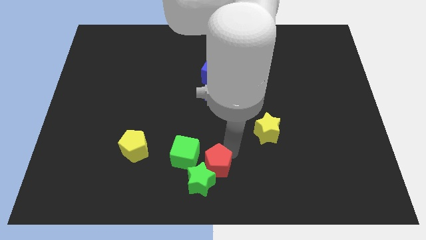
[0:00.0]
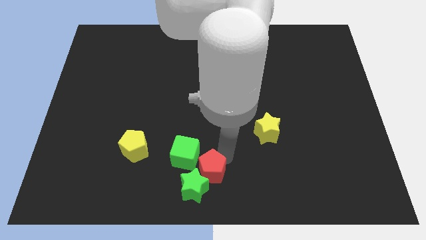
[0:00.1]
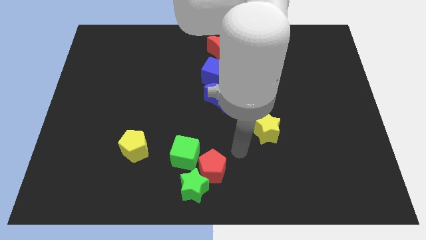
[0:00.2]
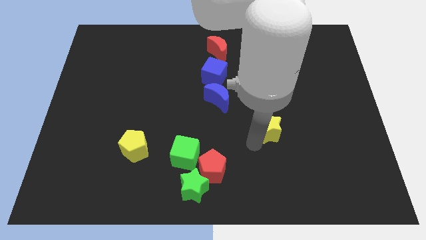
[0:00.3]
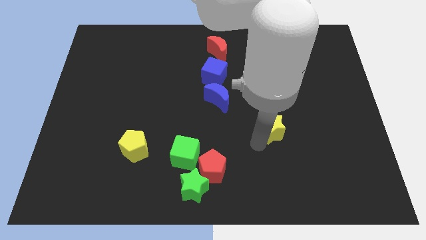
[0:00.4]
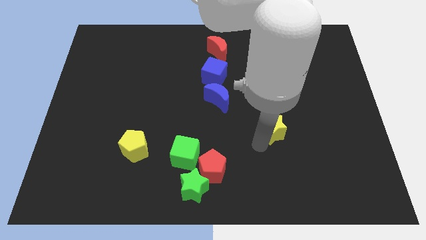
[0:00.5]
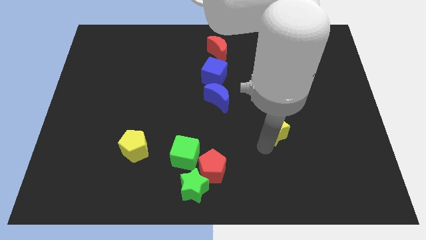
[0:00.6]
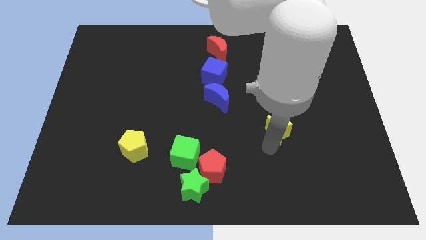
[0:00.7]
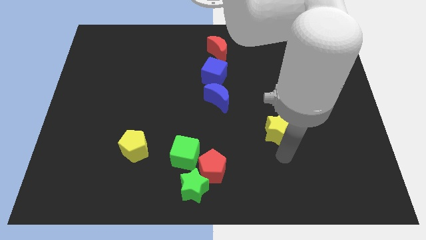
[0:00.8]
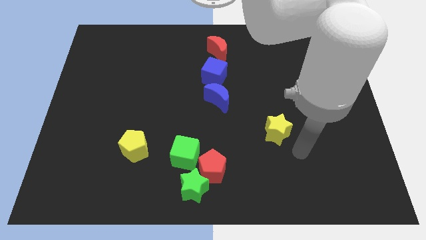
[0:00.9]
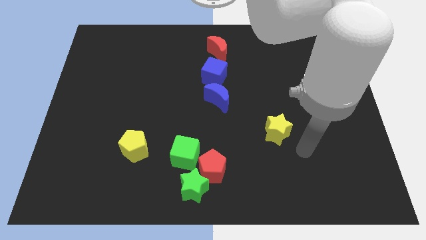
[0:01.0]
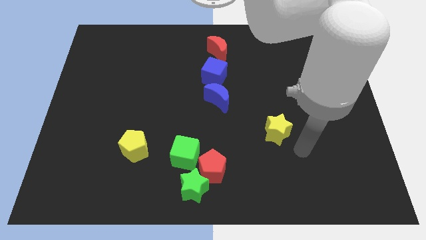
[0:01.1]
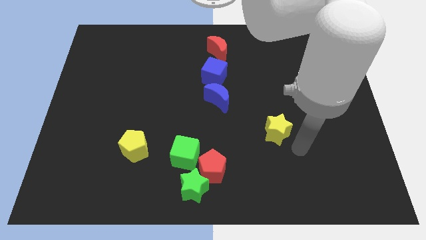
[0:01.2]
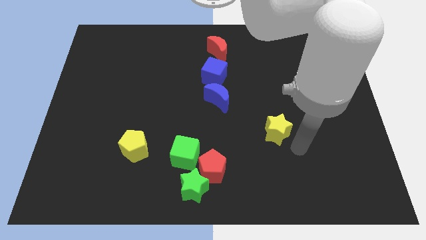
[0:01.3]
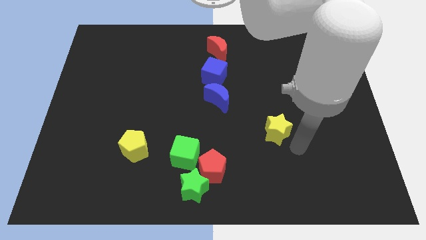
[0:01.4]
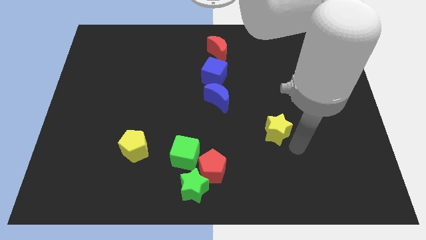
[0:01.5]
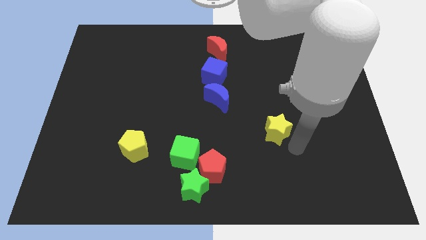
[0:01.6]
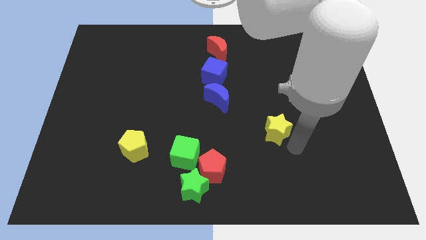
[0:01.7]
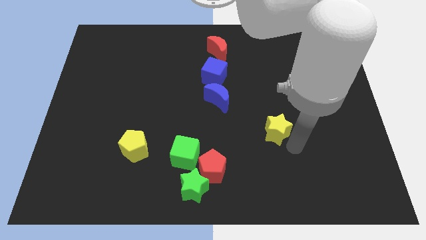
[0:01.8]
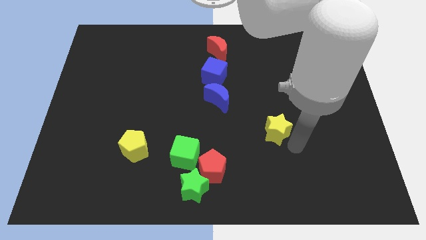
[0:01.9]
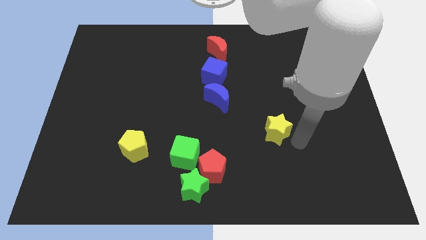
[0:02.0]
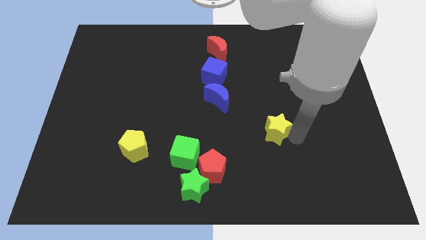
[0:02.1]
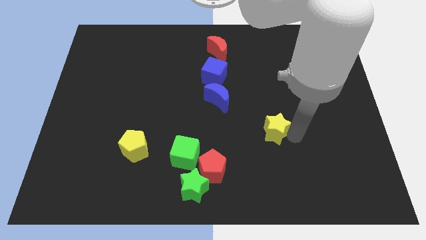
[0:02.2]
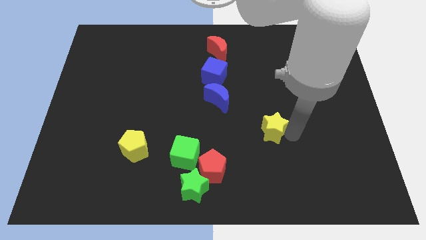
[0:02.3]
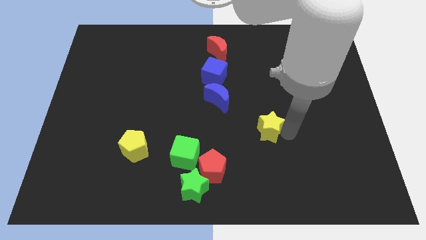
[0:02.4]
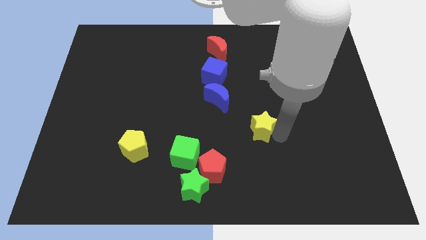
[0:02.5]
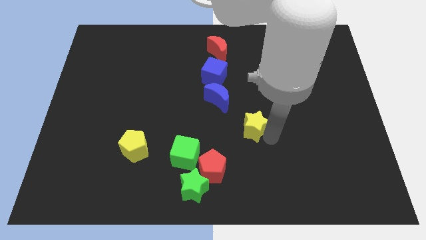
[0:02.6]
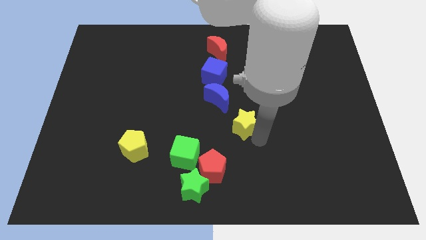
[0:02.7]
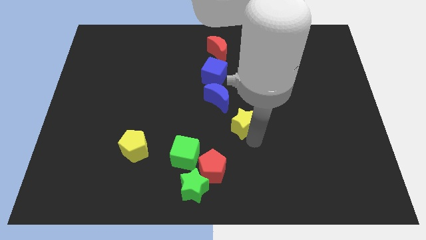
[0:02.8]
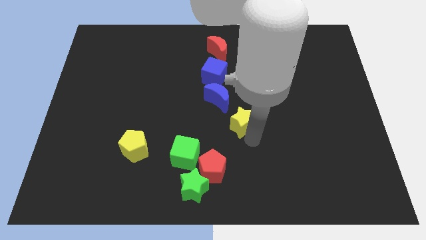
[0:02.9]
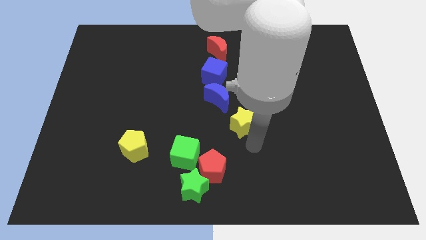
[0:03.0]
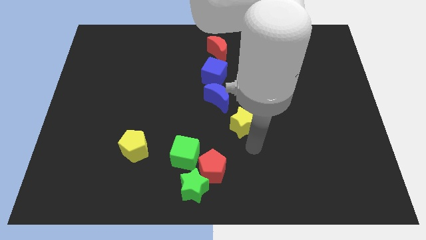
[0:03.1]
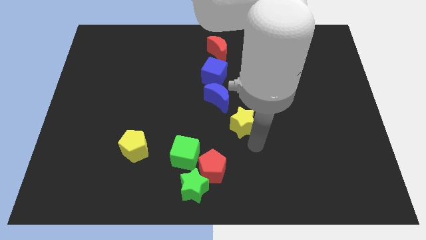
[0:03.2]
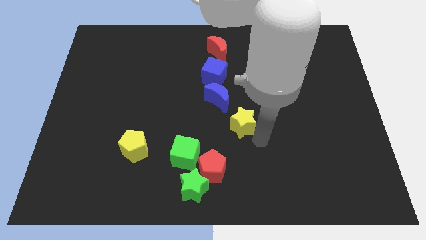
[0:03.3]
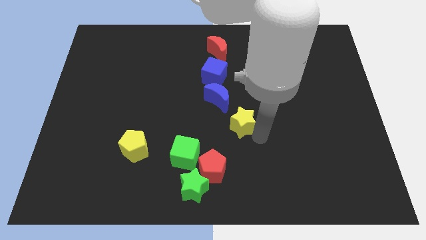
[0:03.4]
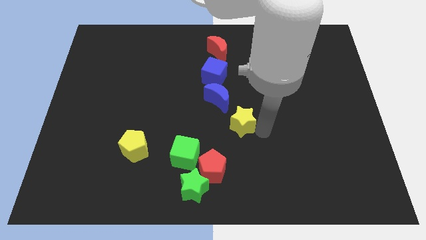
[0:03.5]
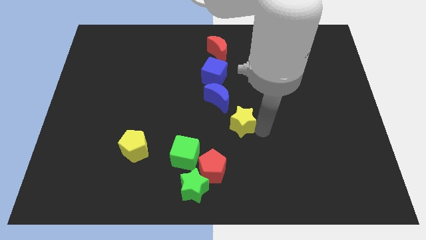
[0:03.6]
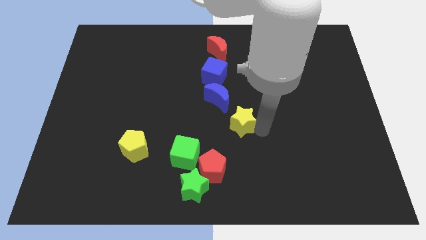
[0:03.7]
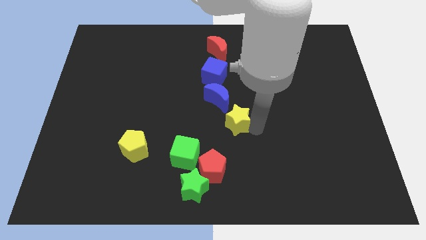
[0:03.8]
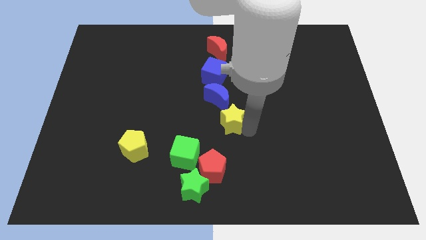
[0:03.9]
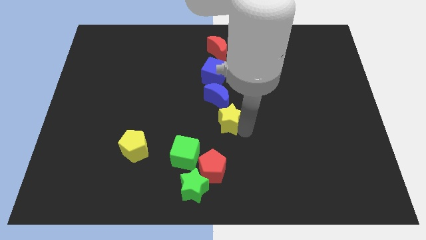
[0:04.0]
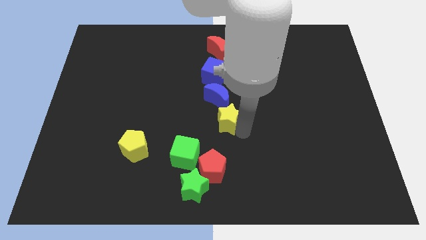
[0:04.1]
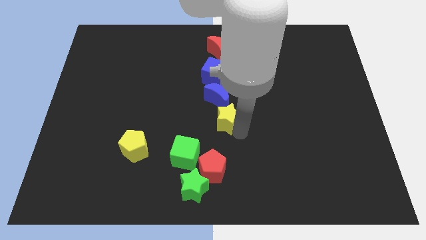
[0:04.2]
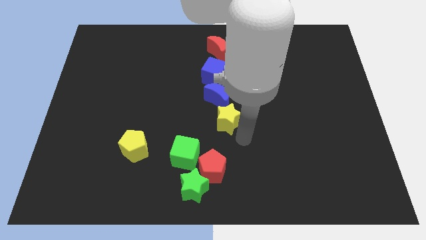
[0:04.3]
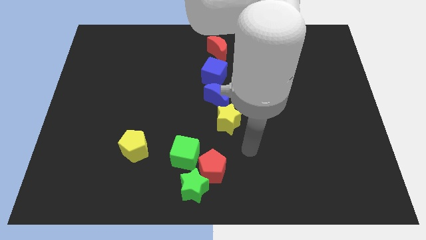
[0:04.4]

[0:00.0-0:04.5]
push the yellow star to the bottom of the blue crescent

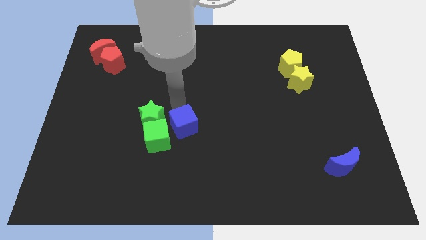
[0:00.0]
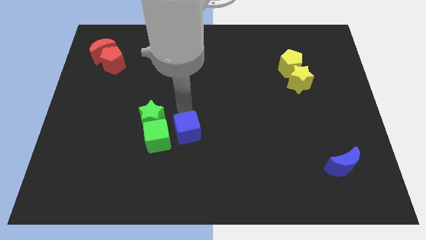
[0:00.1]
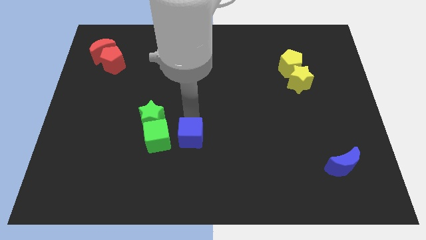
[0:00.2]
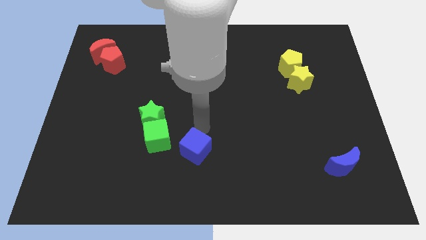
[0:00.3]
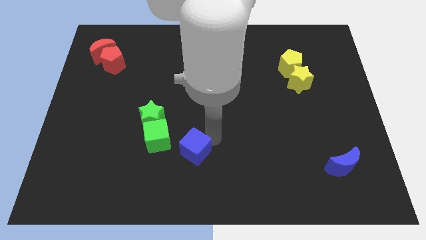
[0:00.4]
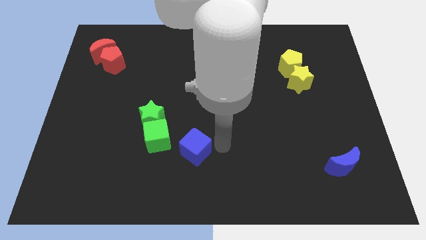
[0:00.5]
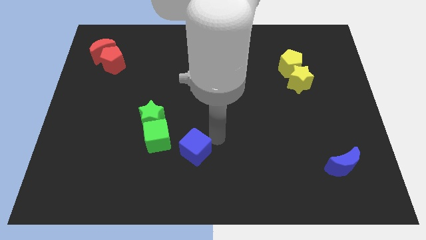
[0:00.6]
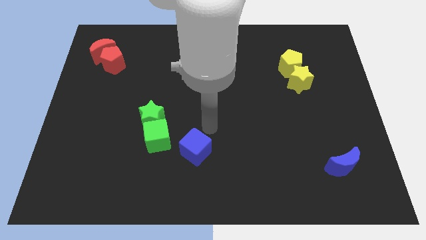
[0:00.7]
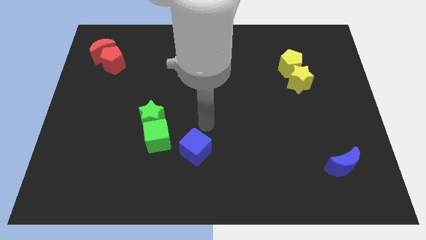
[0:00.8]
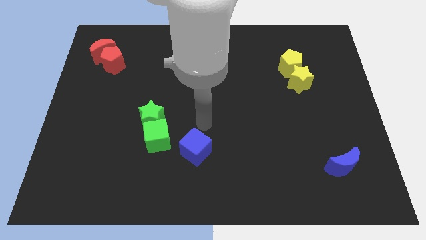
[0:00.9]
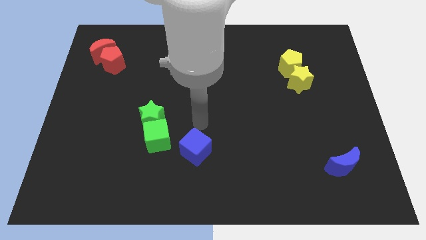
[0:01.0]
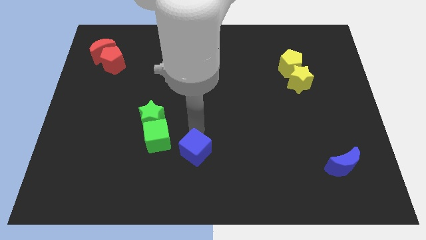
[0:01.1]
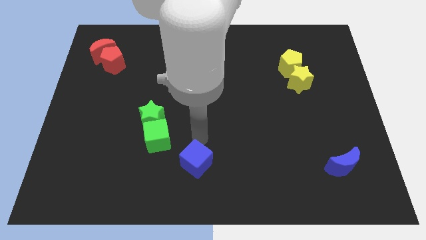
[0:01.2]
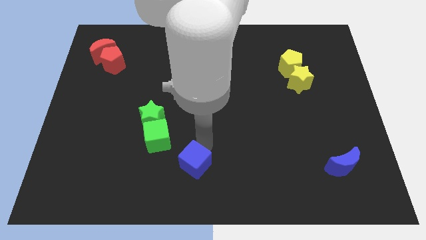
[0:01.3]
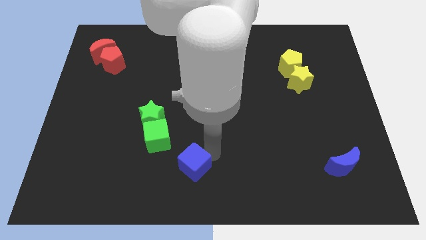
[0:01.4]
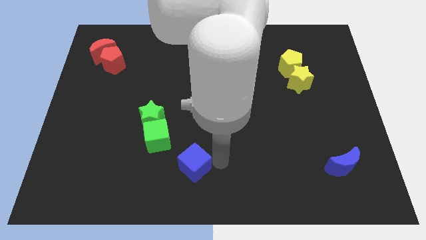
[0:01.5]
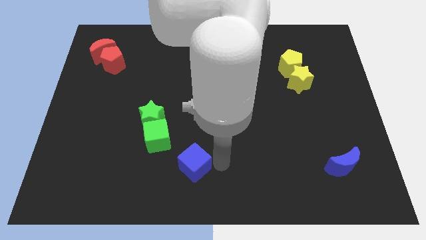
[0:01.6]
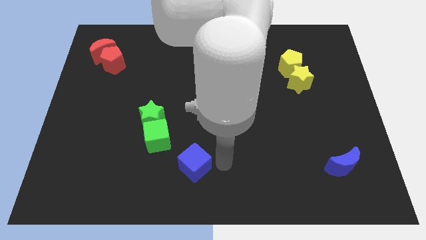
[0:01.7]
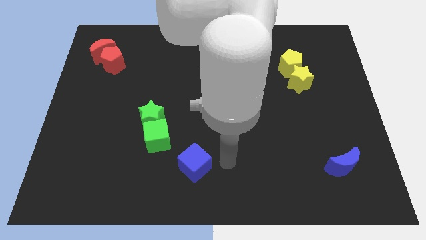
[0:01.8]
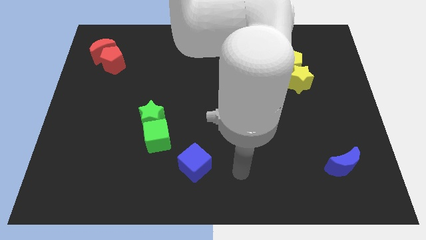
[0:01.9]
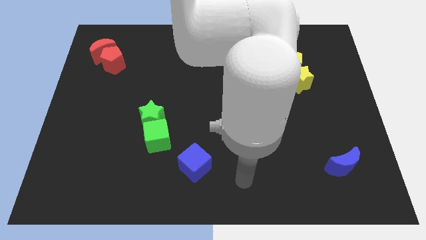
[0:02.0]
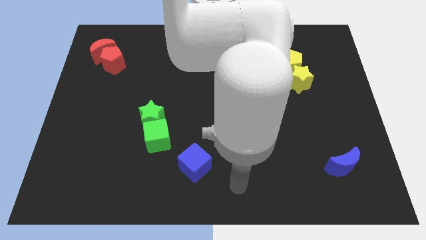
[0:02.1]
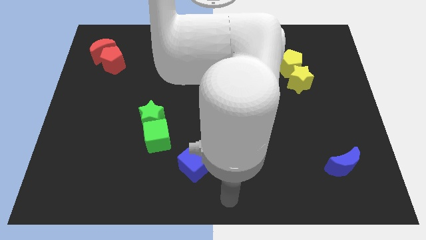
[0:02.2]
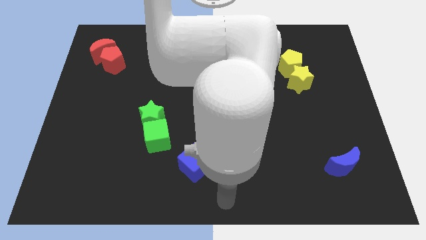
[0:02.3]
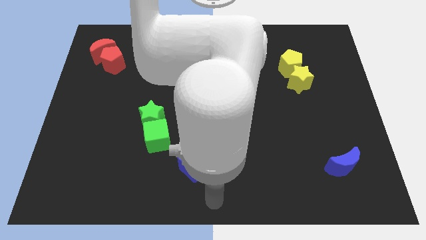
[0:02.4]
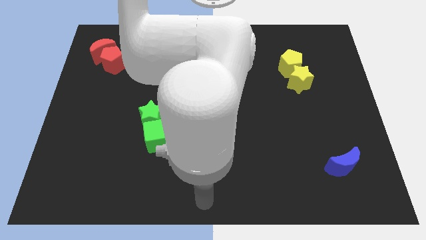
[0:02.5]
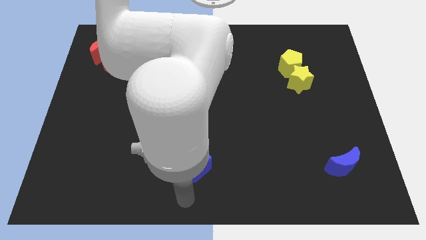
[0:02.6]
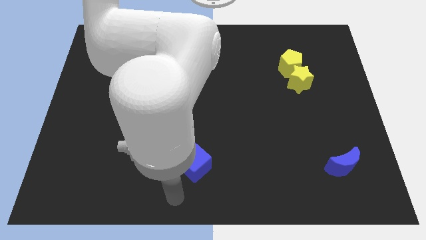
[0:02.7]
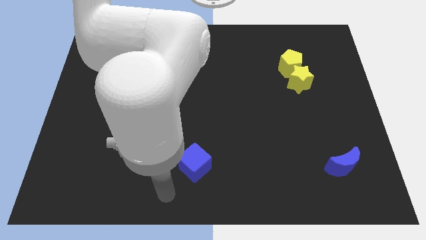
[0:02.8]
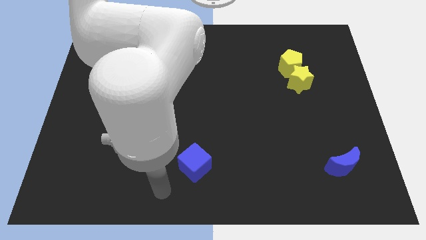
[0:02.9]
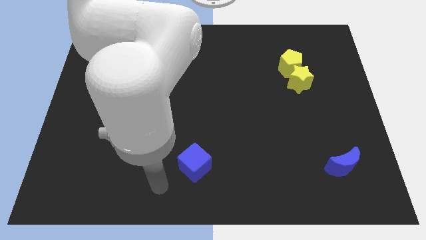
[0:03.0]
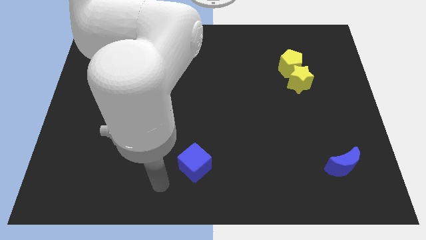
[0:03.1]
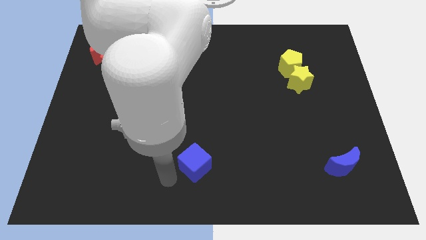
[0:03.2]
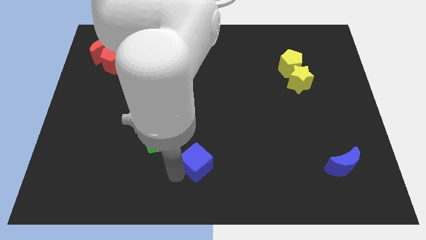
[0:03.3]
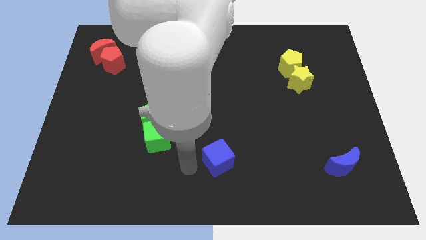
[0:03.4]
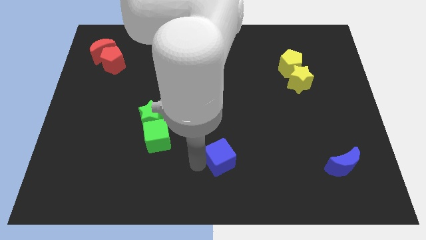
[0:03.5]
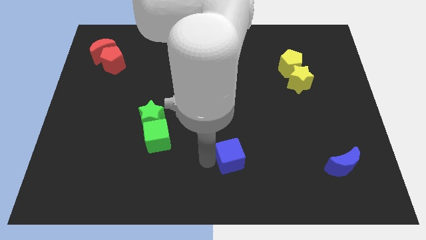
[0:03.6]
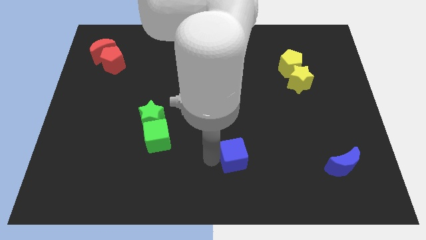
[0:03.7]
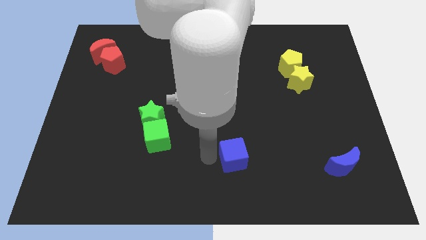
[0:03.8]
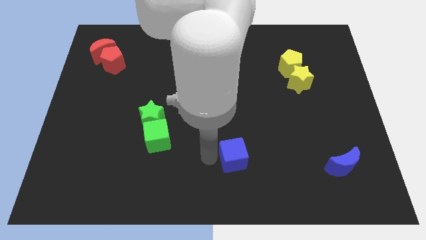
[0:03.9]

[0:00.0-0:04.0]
push blue cube to the left of the blue crescent

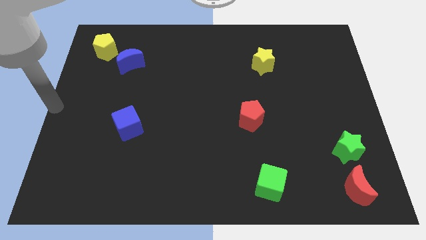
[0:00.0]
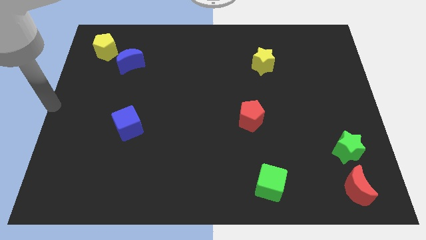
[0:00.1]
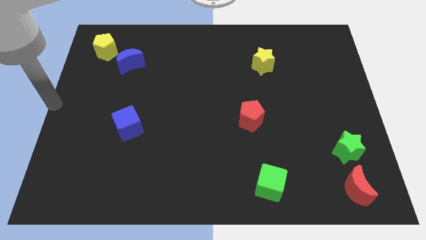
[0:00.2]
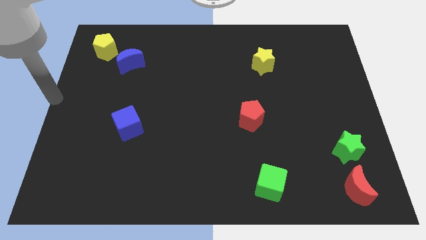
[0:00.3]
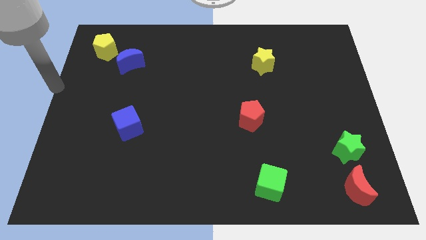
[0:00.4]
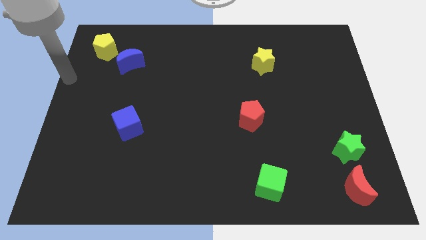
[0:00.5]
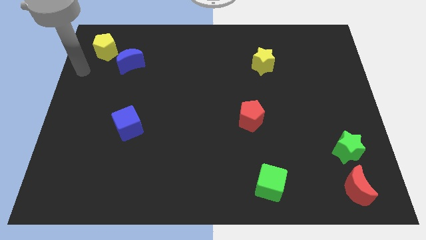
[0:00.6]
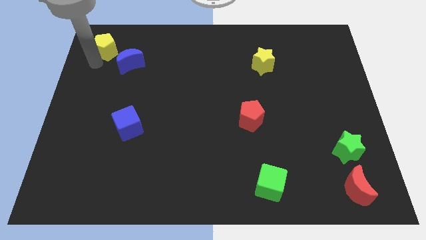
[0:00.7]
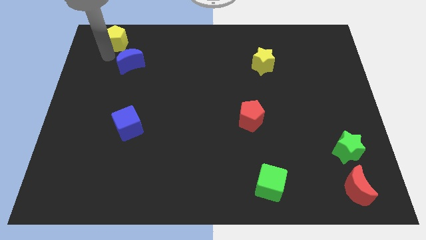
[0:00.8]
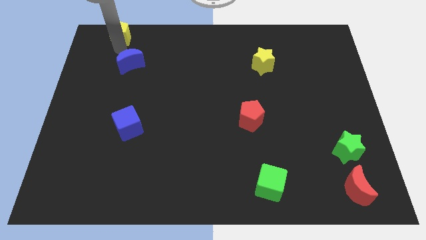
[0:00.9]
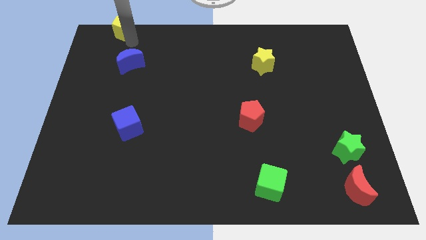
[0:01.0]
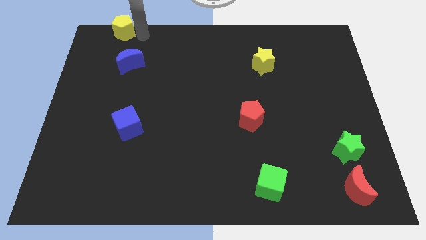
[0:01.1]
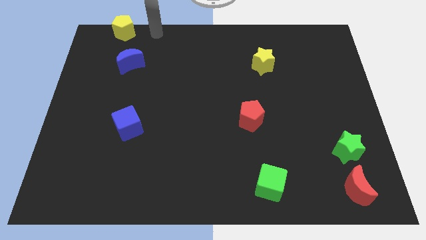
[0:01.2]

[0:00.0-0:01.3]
push yellow pentagon to the top left
